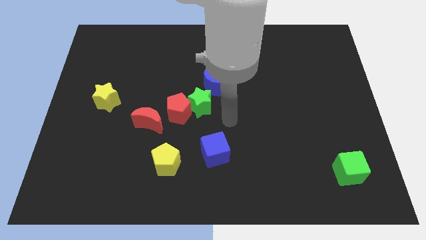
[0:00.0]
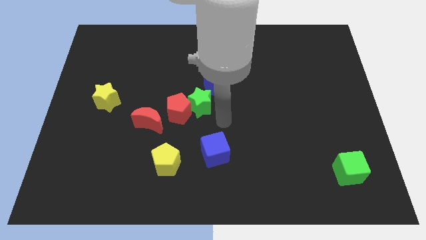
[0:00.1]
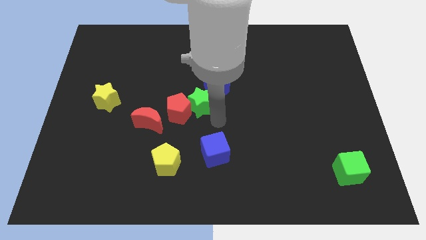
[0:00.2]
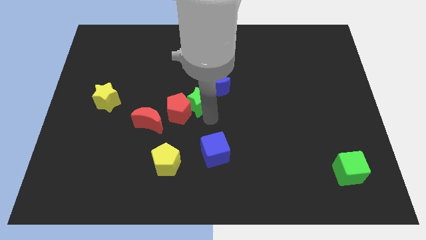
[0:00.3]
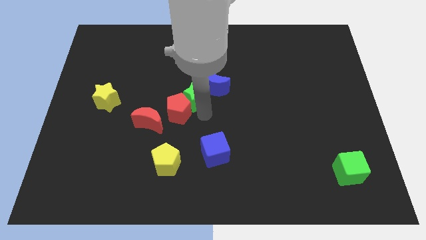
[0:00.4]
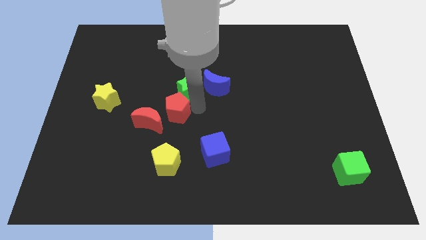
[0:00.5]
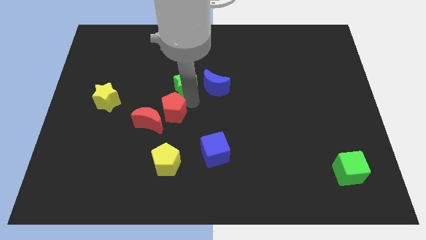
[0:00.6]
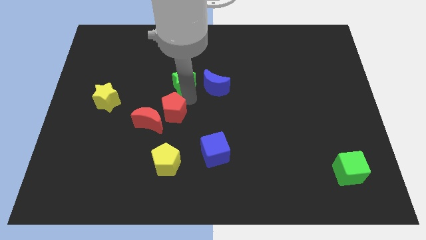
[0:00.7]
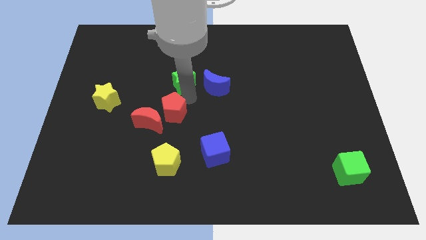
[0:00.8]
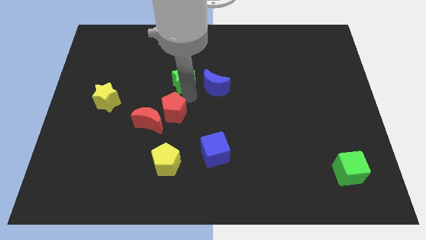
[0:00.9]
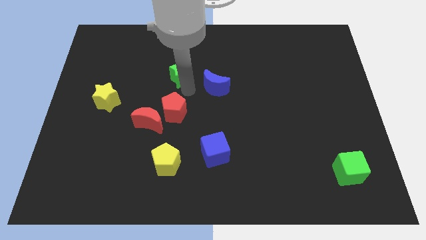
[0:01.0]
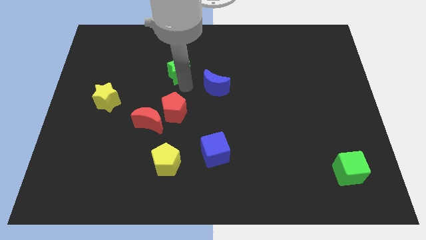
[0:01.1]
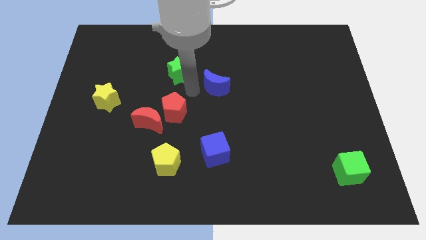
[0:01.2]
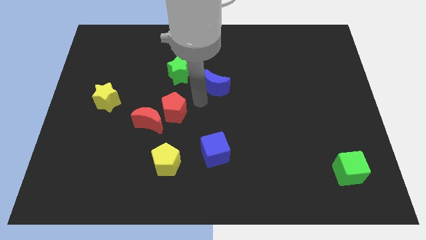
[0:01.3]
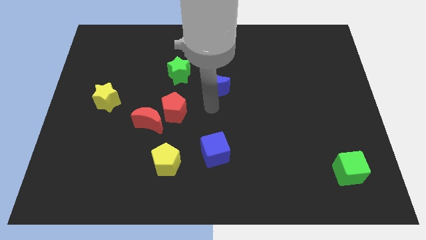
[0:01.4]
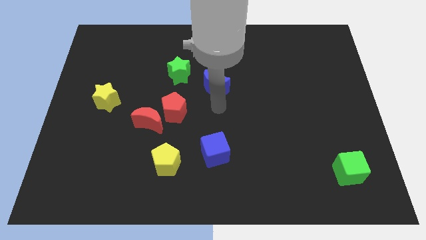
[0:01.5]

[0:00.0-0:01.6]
push the green star vertical towards the top

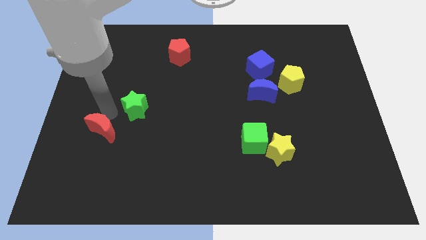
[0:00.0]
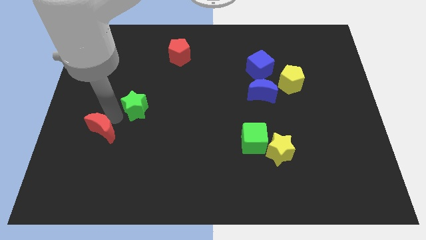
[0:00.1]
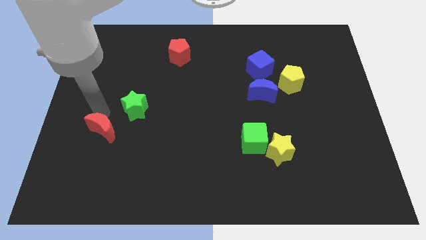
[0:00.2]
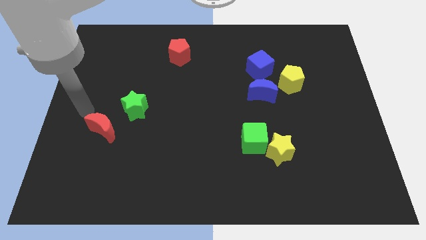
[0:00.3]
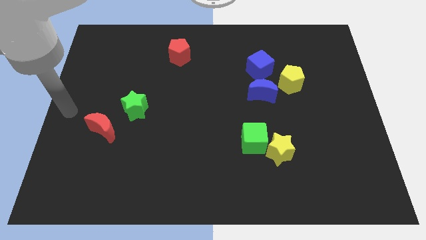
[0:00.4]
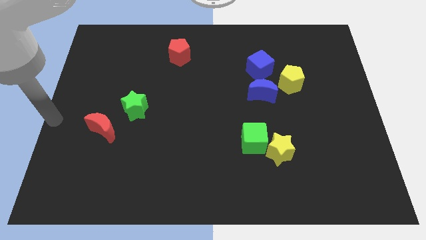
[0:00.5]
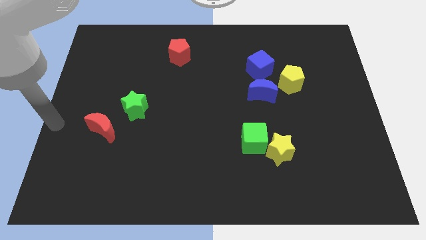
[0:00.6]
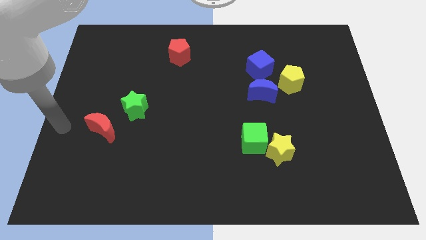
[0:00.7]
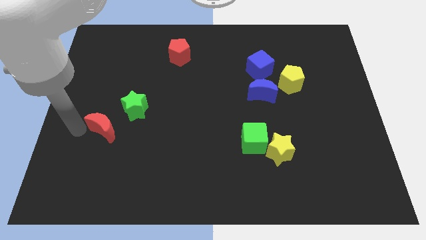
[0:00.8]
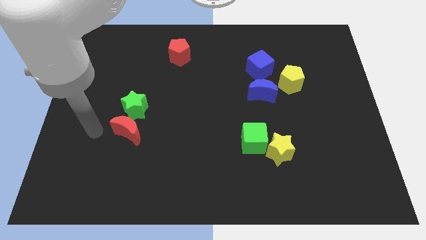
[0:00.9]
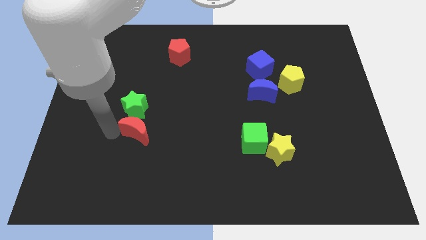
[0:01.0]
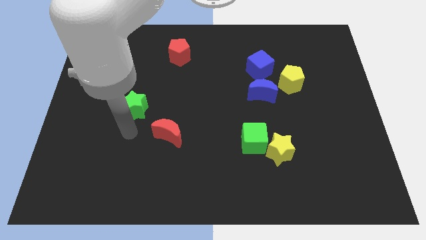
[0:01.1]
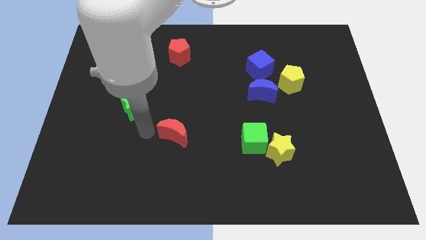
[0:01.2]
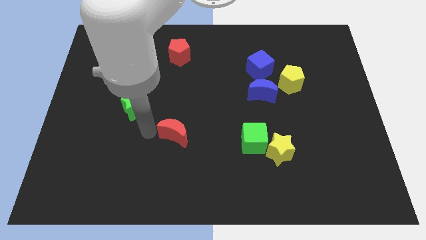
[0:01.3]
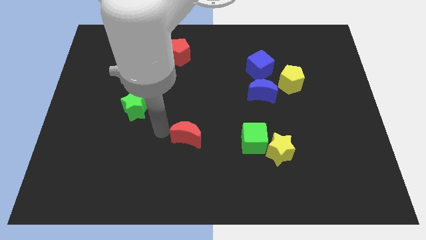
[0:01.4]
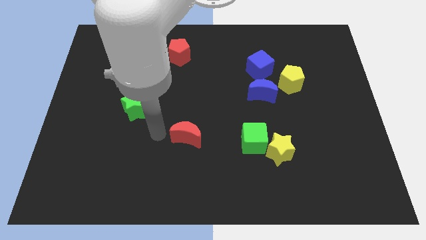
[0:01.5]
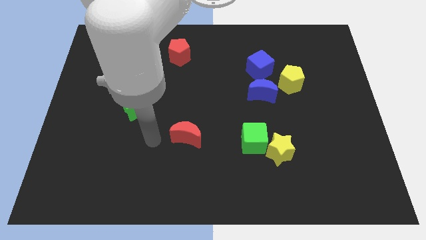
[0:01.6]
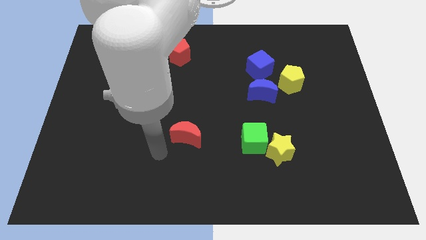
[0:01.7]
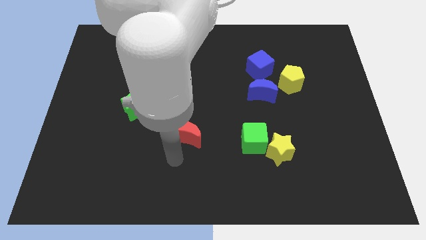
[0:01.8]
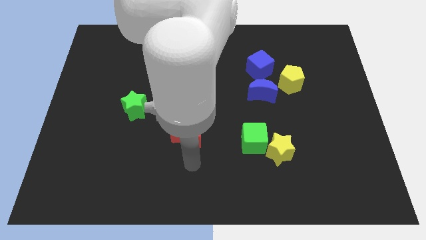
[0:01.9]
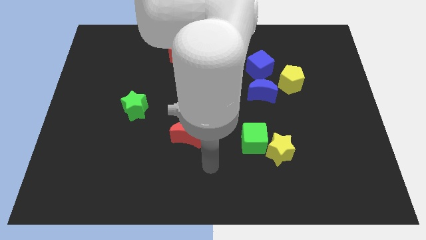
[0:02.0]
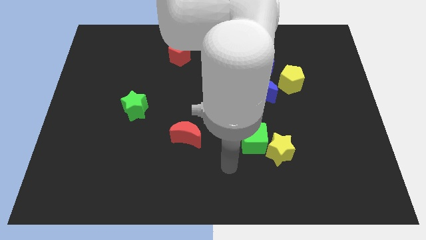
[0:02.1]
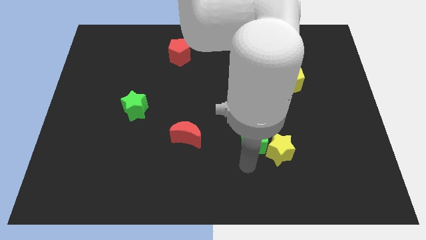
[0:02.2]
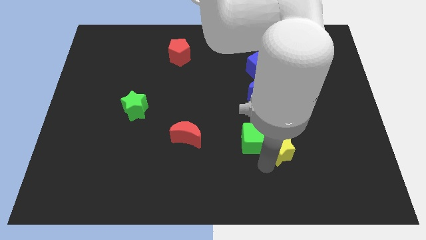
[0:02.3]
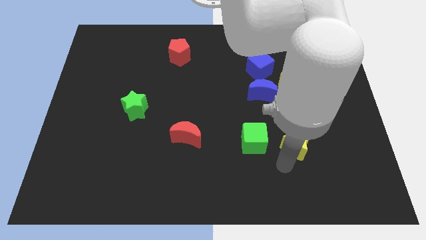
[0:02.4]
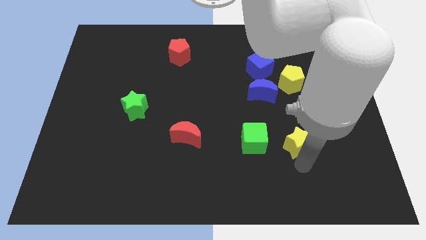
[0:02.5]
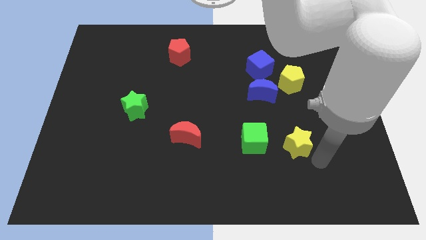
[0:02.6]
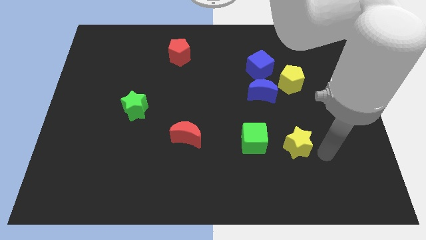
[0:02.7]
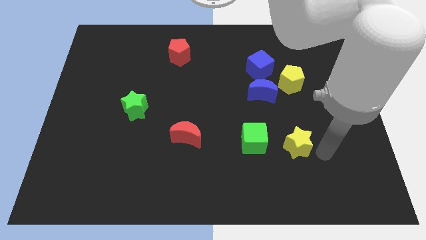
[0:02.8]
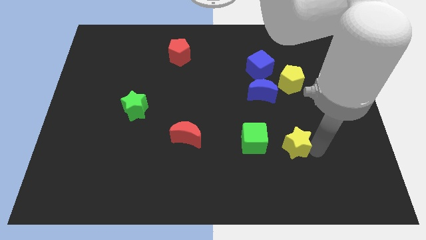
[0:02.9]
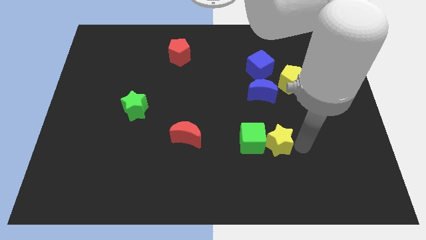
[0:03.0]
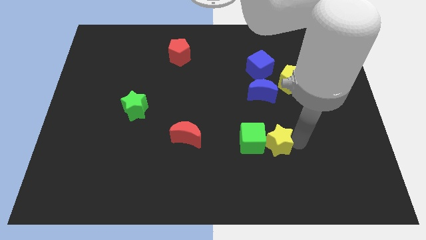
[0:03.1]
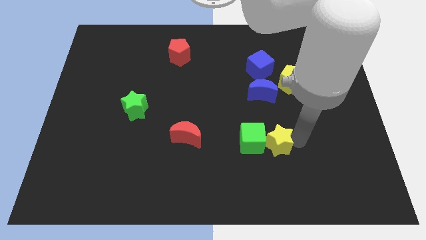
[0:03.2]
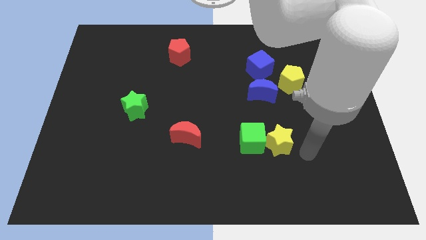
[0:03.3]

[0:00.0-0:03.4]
push yellow star beside green cube

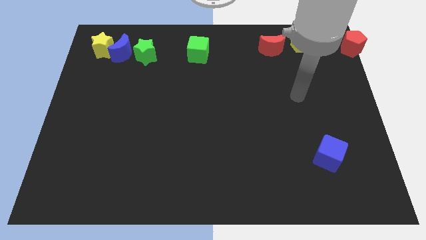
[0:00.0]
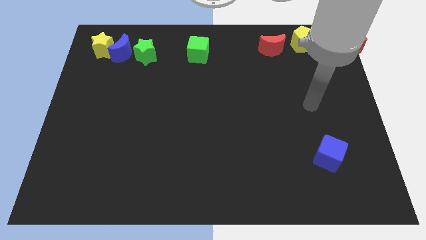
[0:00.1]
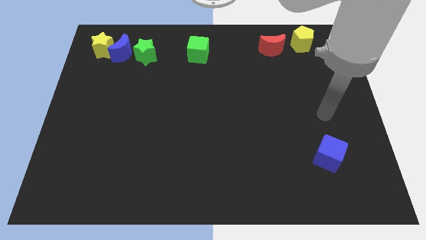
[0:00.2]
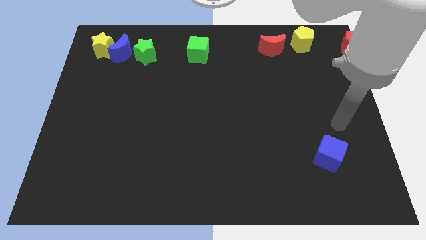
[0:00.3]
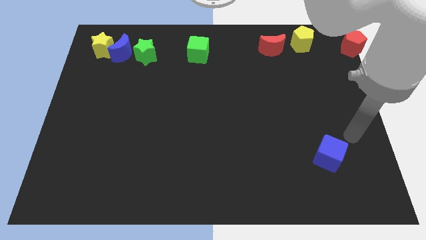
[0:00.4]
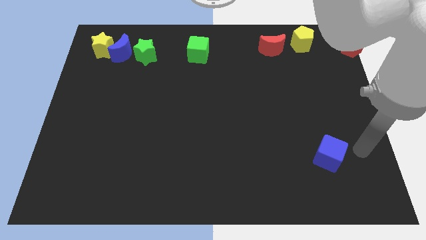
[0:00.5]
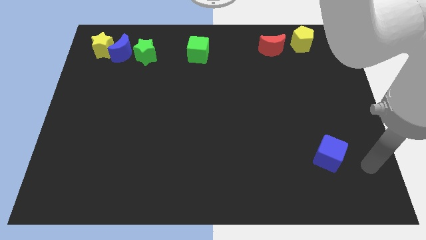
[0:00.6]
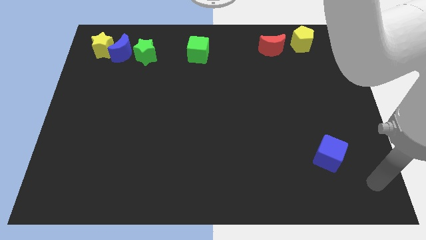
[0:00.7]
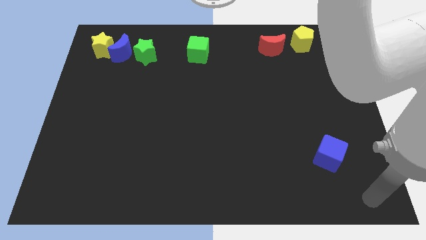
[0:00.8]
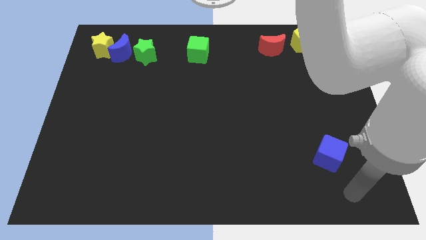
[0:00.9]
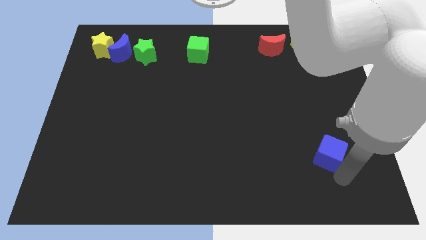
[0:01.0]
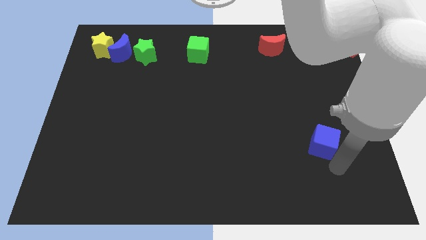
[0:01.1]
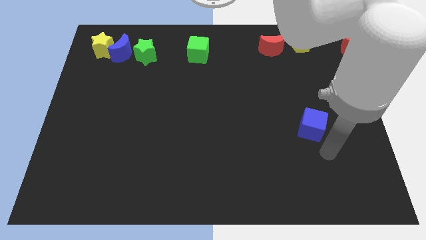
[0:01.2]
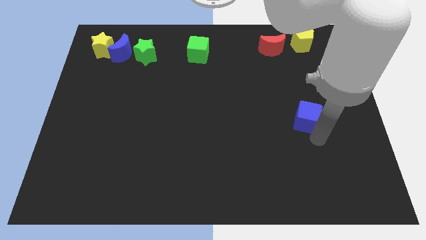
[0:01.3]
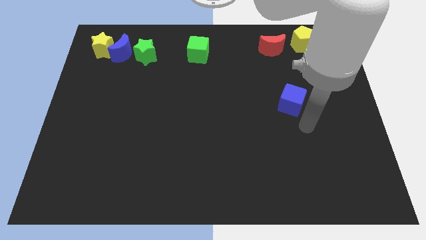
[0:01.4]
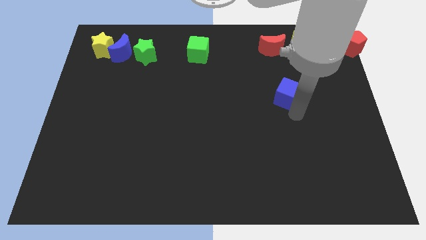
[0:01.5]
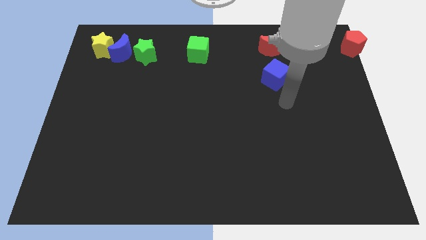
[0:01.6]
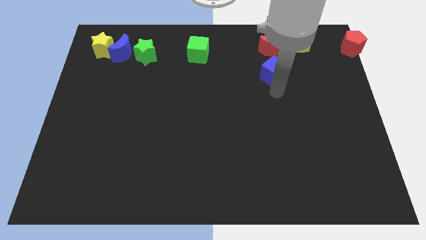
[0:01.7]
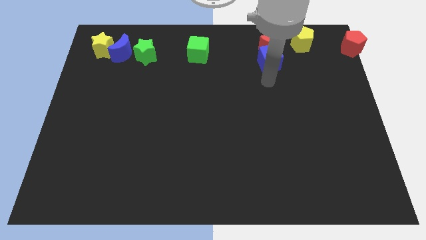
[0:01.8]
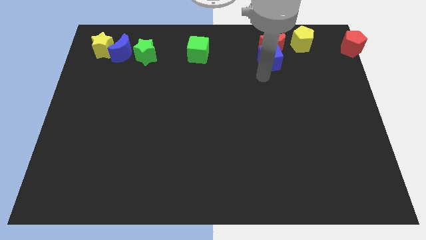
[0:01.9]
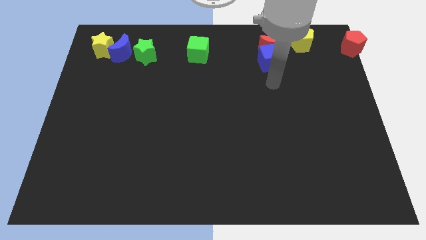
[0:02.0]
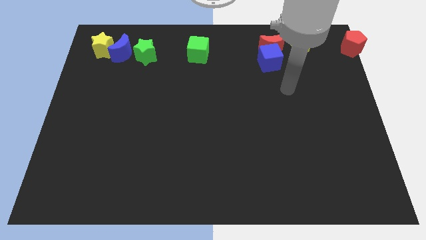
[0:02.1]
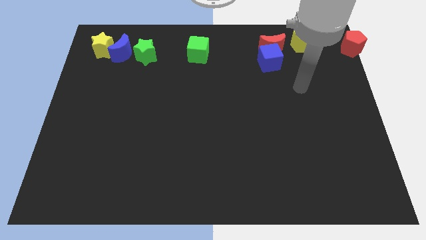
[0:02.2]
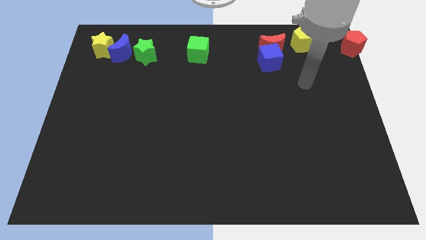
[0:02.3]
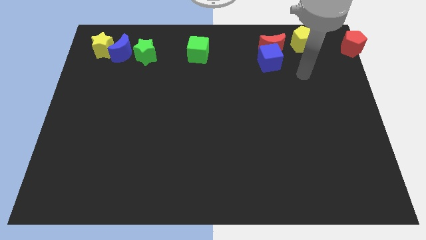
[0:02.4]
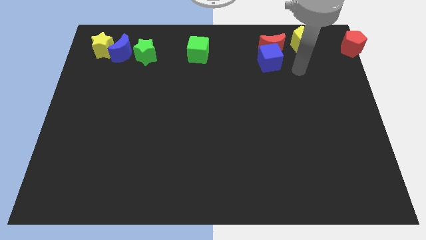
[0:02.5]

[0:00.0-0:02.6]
push the blue cube to the bottom of the red crescent

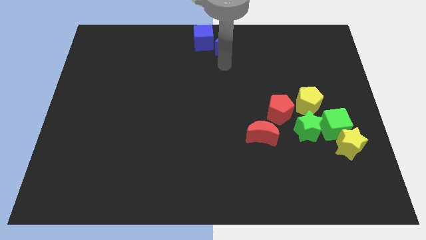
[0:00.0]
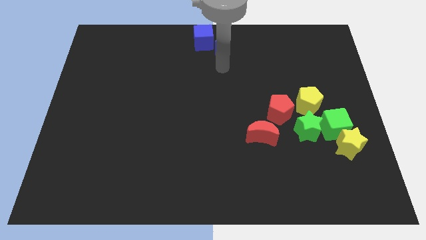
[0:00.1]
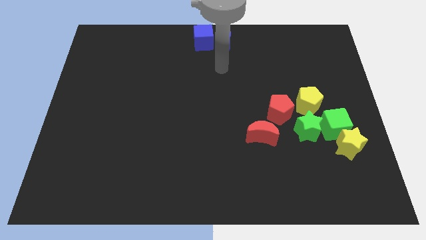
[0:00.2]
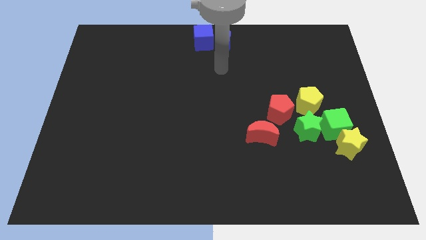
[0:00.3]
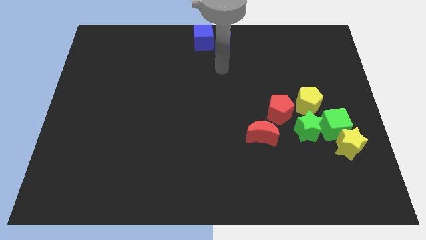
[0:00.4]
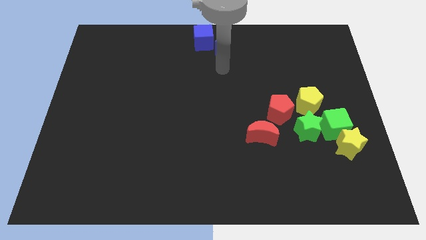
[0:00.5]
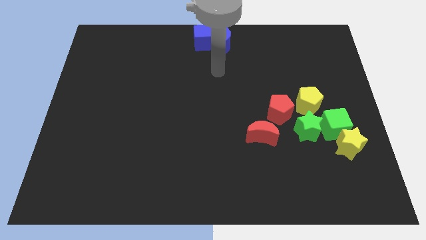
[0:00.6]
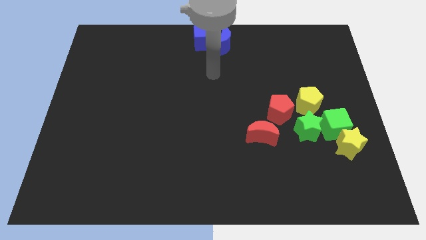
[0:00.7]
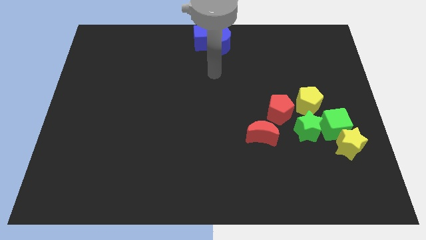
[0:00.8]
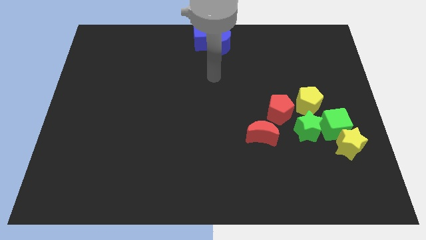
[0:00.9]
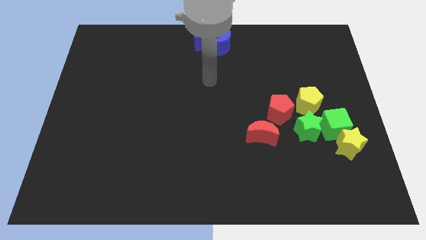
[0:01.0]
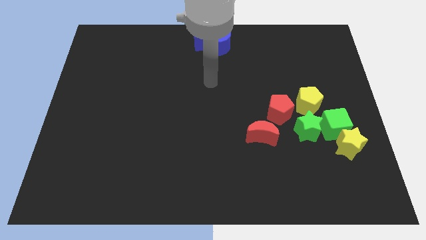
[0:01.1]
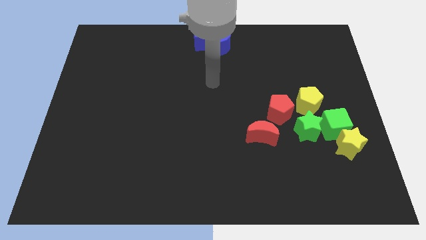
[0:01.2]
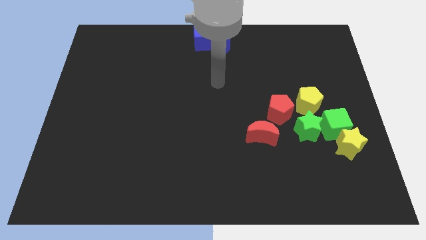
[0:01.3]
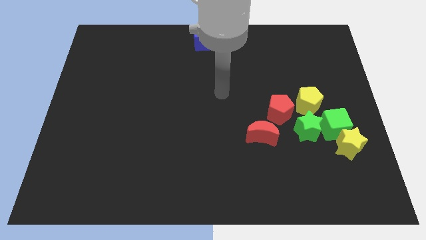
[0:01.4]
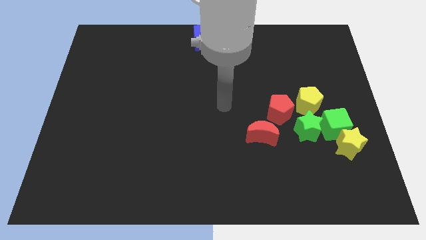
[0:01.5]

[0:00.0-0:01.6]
place your arm to the center of the board
